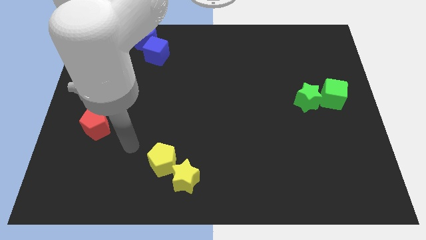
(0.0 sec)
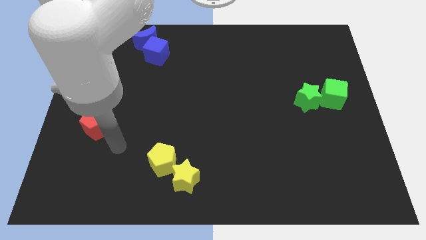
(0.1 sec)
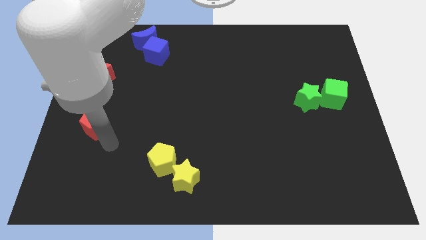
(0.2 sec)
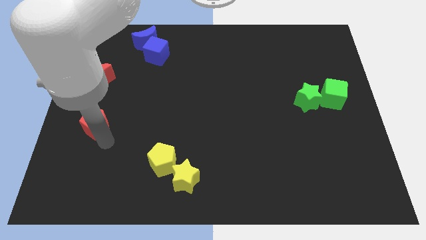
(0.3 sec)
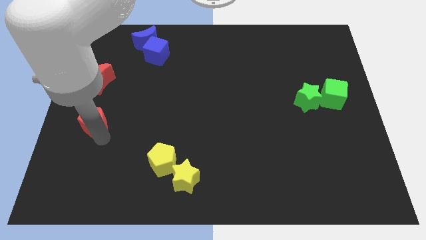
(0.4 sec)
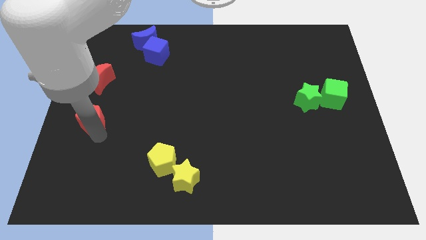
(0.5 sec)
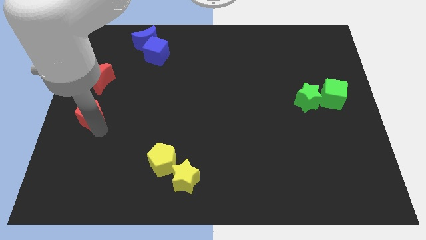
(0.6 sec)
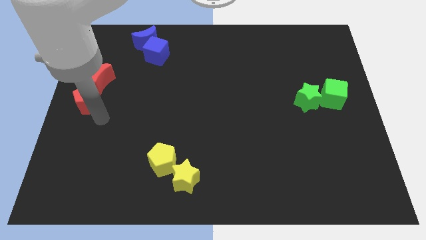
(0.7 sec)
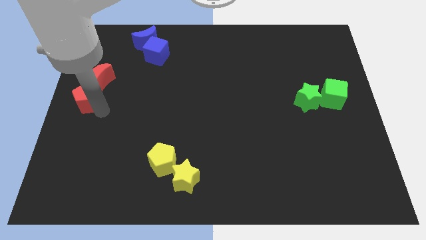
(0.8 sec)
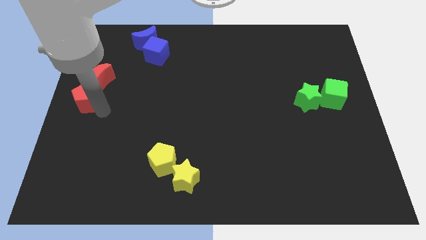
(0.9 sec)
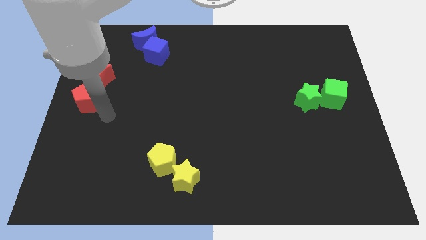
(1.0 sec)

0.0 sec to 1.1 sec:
move red pentagon towards the left corner of board

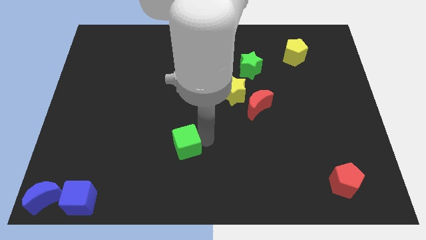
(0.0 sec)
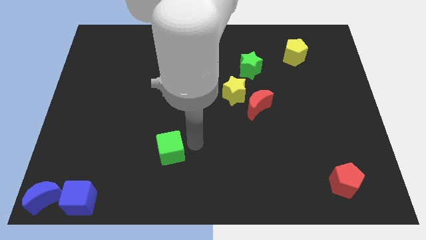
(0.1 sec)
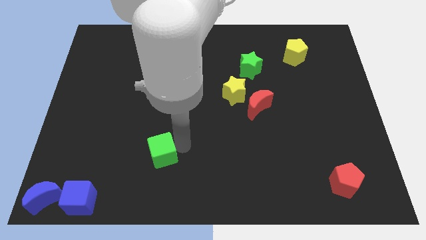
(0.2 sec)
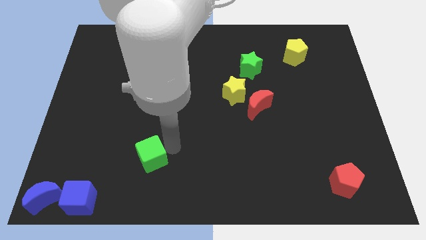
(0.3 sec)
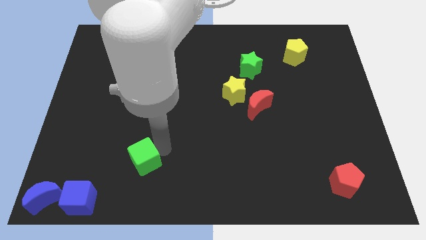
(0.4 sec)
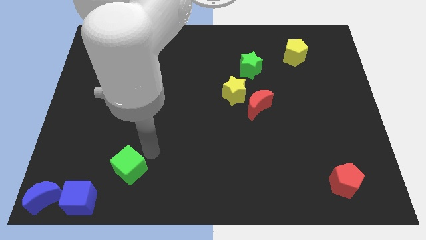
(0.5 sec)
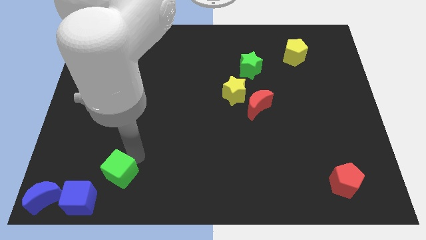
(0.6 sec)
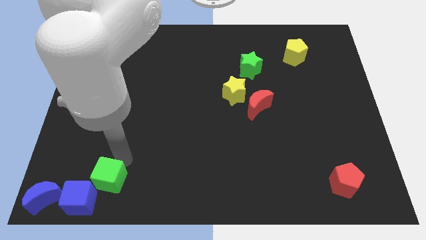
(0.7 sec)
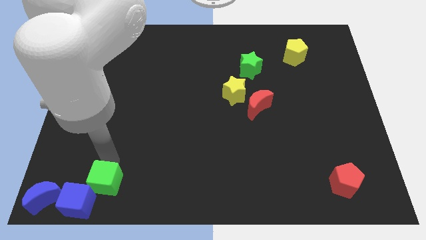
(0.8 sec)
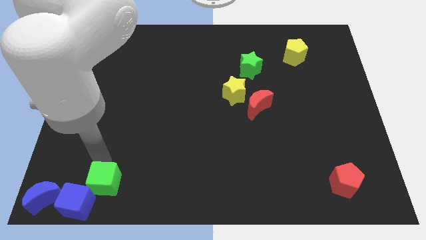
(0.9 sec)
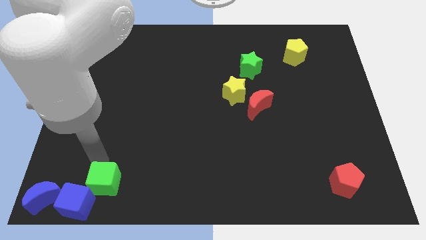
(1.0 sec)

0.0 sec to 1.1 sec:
push green cube into blue cube

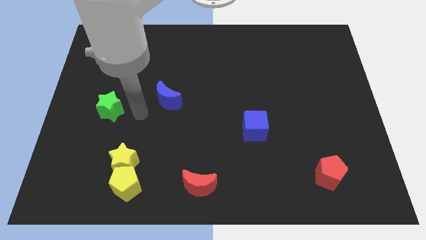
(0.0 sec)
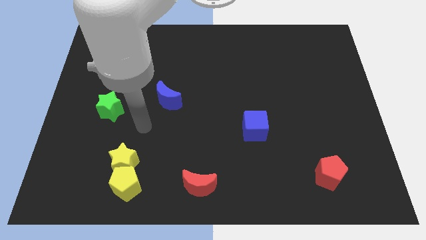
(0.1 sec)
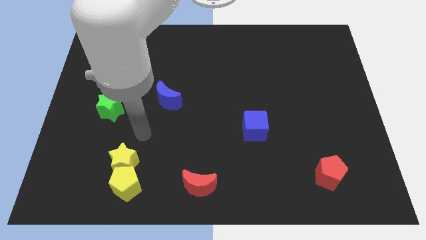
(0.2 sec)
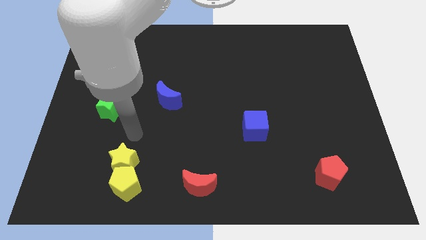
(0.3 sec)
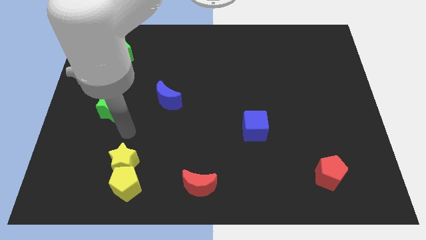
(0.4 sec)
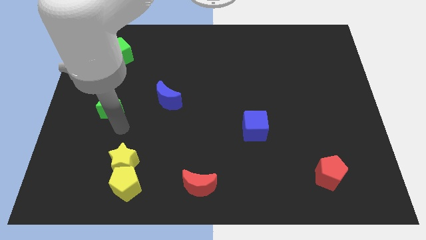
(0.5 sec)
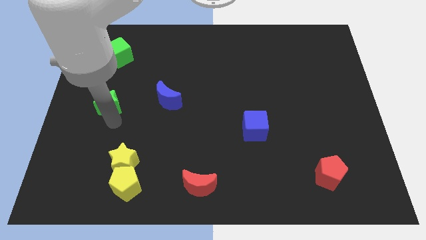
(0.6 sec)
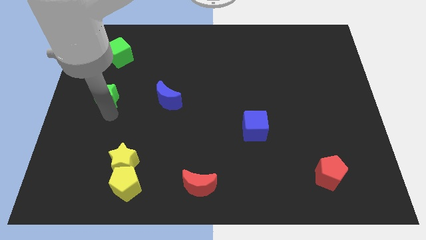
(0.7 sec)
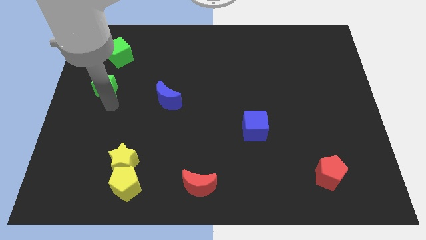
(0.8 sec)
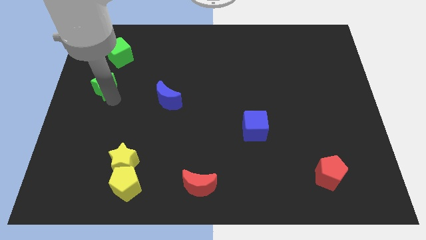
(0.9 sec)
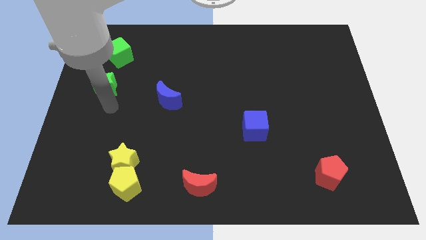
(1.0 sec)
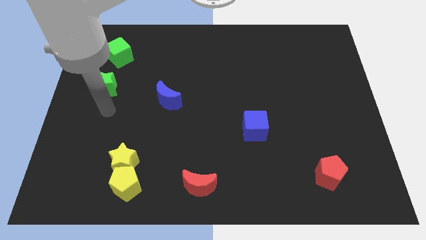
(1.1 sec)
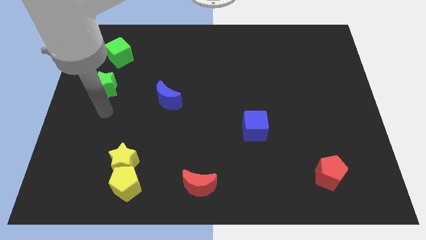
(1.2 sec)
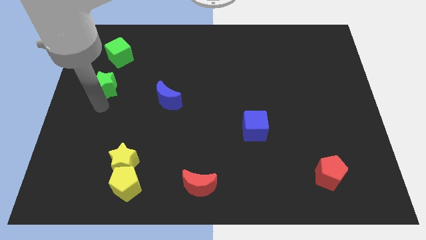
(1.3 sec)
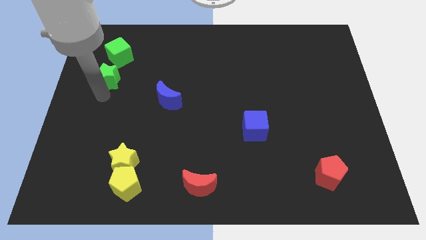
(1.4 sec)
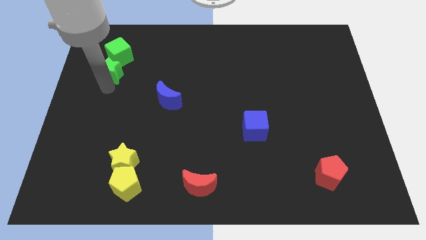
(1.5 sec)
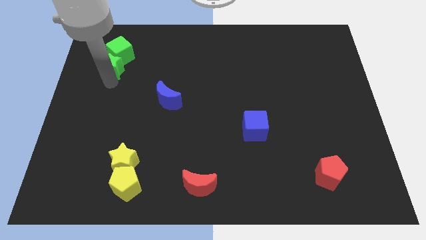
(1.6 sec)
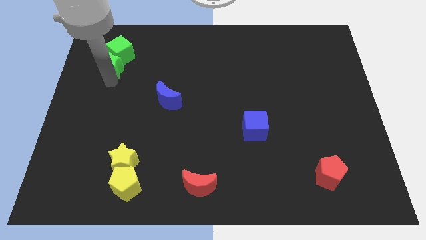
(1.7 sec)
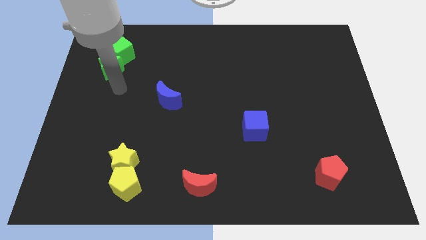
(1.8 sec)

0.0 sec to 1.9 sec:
push the green star into the green cube

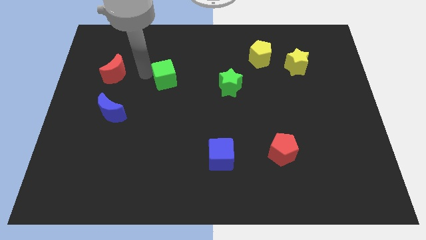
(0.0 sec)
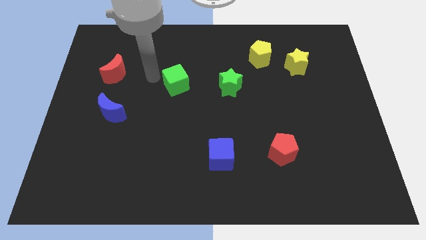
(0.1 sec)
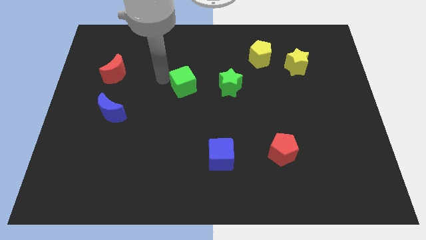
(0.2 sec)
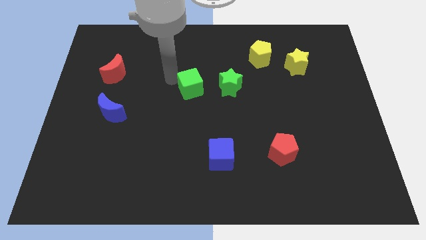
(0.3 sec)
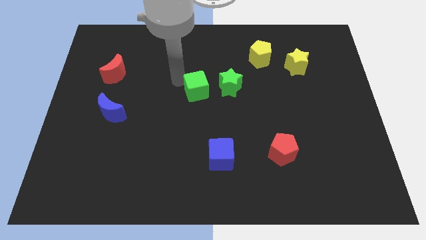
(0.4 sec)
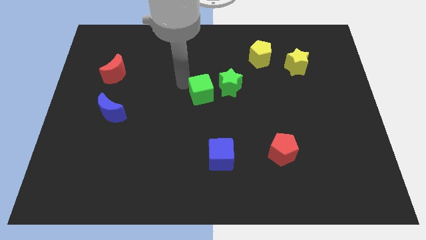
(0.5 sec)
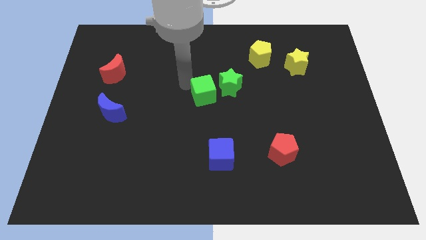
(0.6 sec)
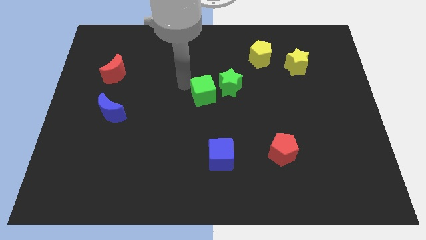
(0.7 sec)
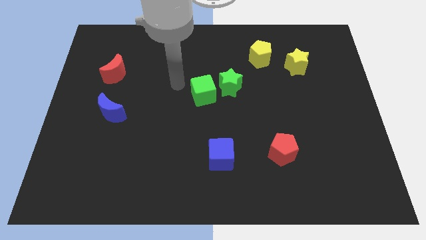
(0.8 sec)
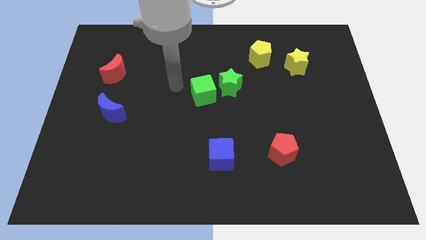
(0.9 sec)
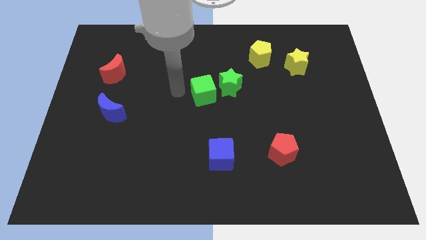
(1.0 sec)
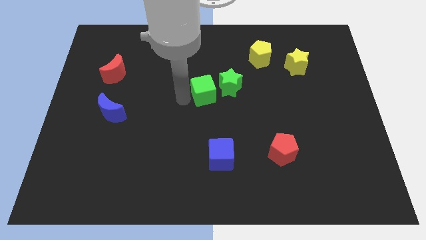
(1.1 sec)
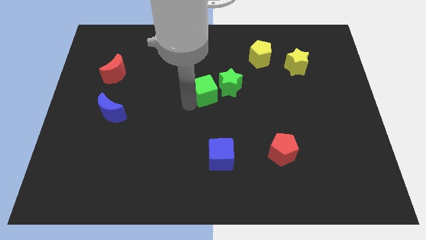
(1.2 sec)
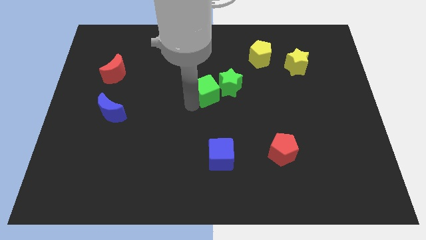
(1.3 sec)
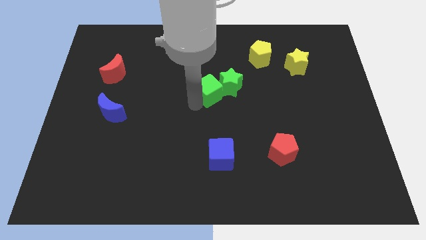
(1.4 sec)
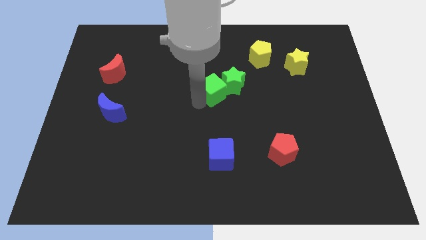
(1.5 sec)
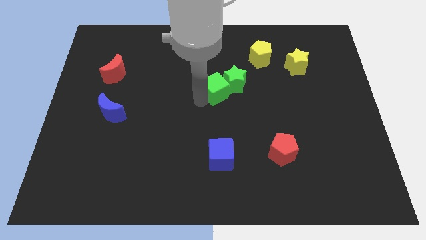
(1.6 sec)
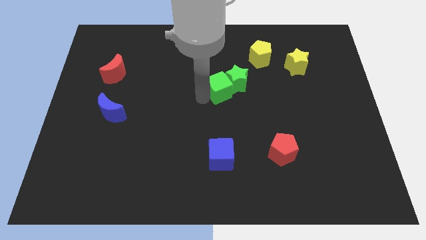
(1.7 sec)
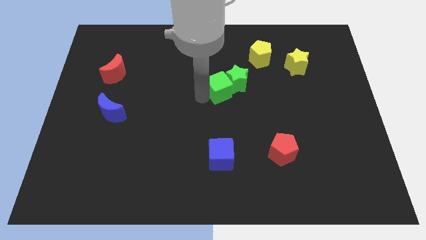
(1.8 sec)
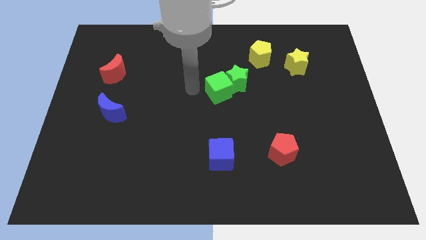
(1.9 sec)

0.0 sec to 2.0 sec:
push the green cube into green star diagonal left

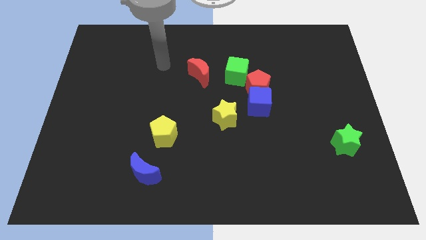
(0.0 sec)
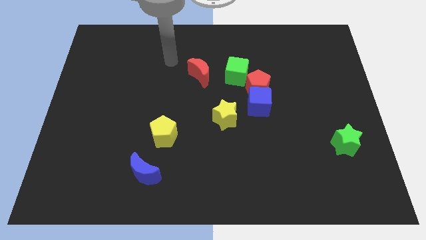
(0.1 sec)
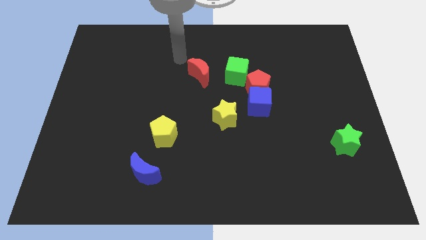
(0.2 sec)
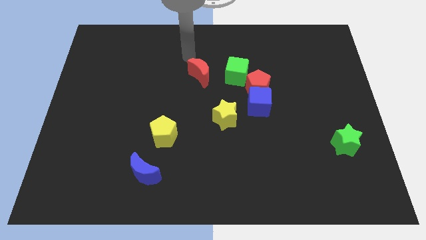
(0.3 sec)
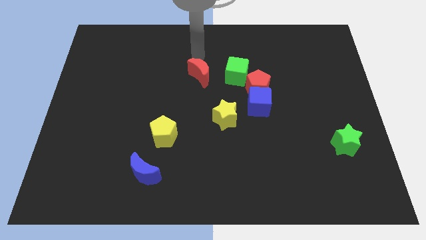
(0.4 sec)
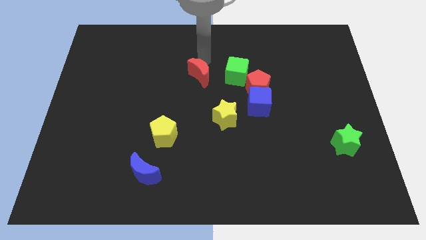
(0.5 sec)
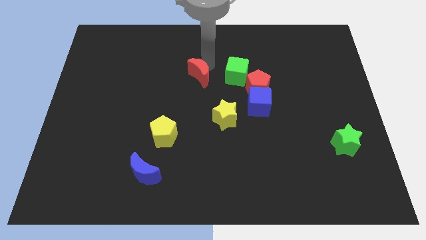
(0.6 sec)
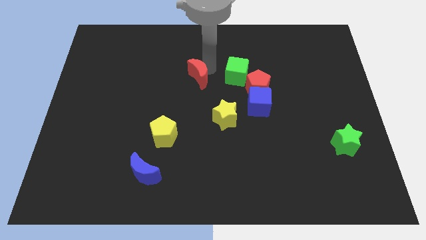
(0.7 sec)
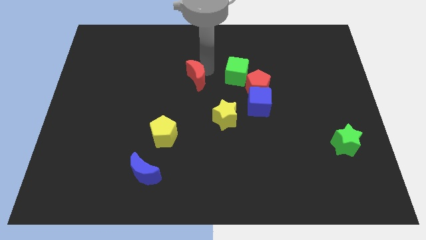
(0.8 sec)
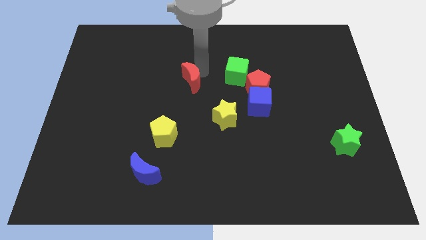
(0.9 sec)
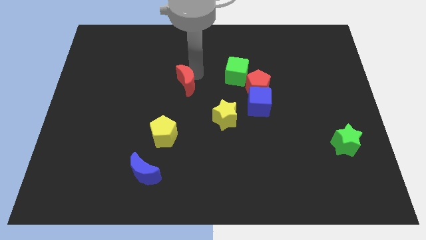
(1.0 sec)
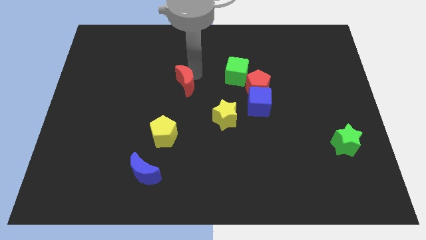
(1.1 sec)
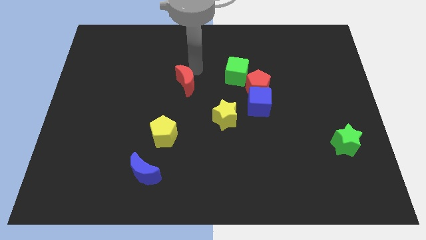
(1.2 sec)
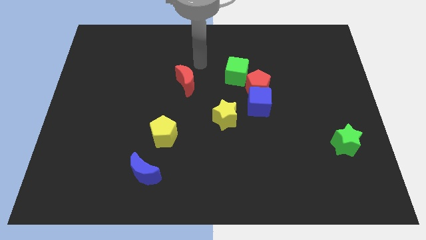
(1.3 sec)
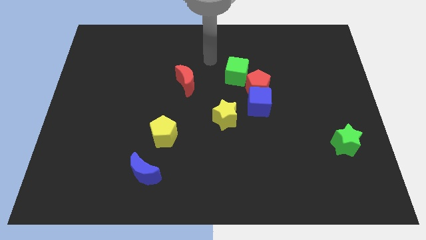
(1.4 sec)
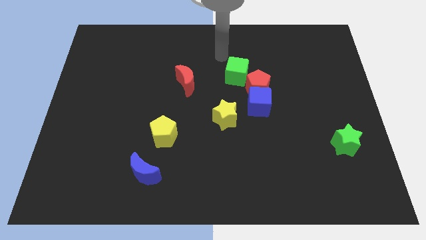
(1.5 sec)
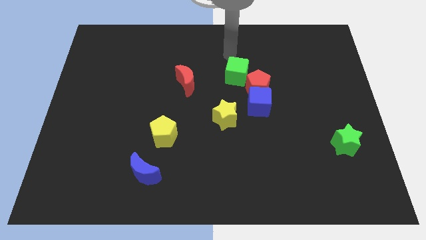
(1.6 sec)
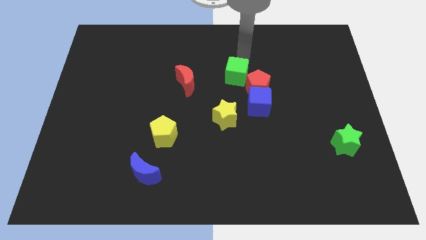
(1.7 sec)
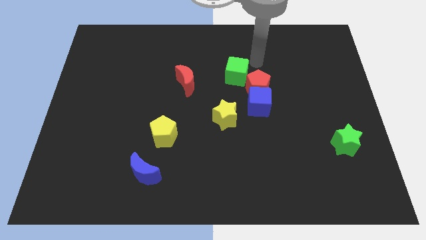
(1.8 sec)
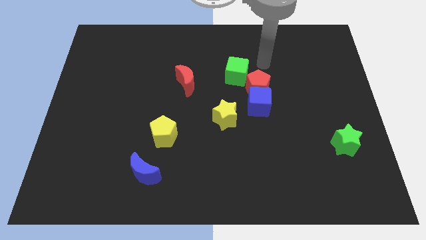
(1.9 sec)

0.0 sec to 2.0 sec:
push the red moon downwards slightly on the left side diagonally

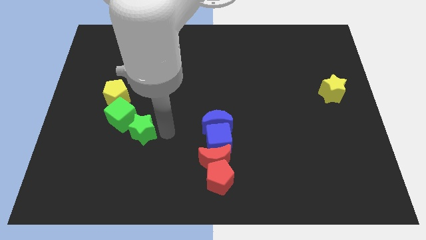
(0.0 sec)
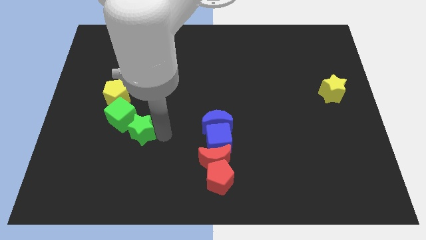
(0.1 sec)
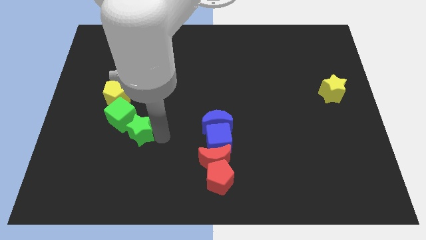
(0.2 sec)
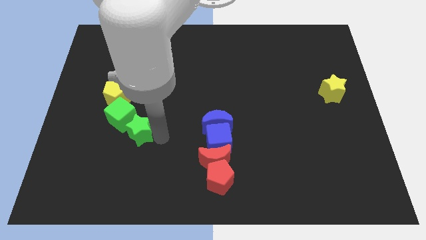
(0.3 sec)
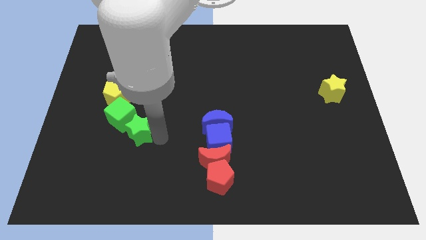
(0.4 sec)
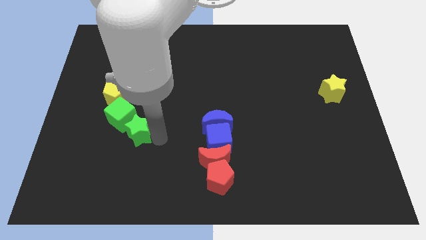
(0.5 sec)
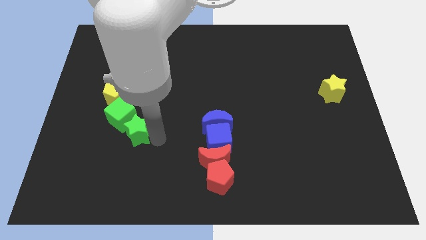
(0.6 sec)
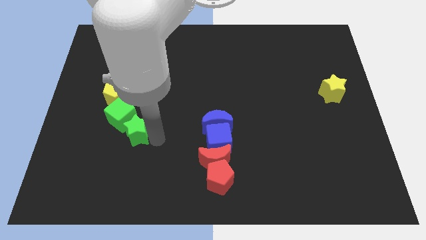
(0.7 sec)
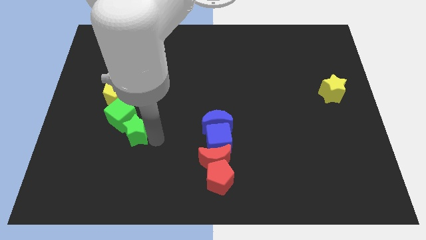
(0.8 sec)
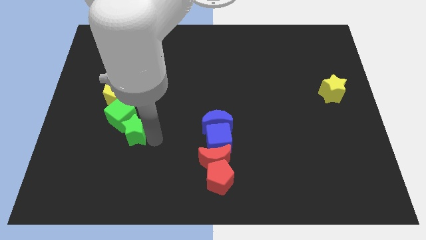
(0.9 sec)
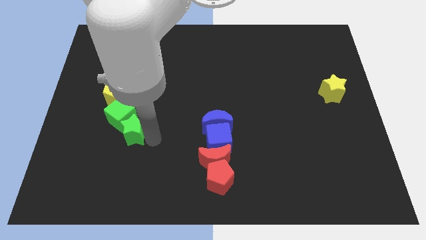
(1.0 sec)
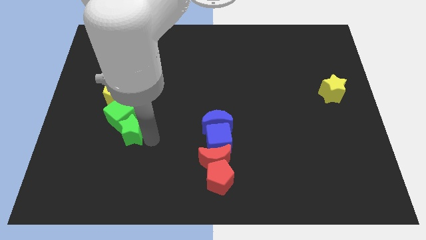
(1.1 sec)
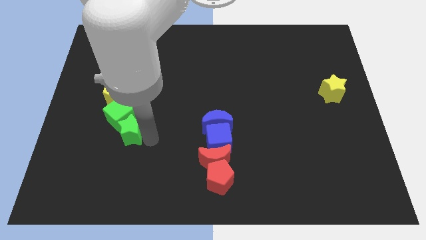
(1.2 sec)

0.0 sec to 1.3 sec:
move the green star into the green cube
